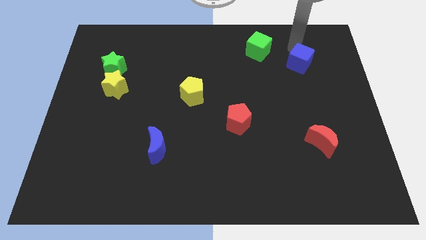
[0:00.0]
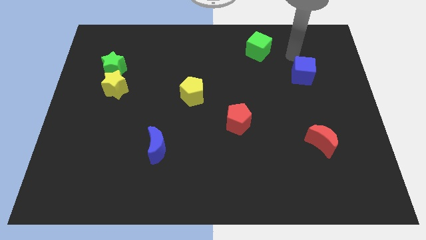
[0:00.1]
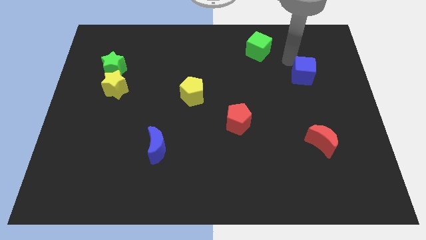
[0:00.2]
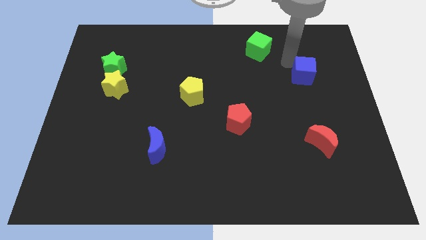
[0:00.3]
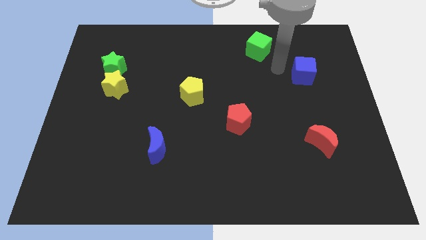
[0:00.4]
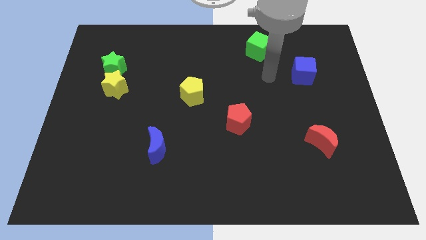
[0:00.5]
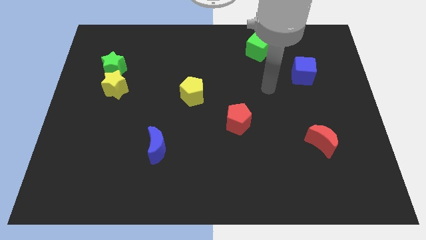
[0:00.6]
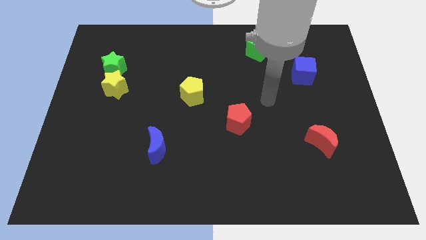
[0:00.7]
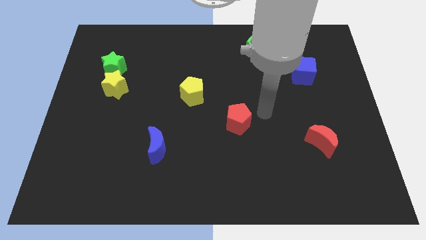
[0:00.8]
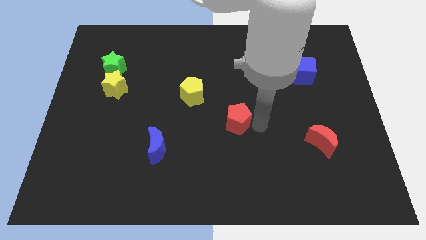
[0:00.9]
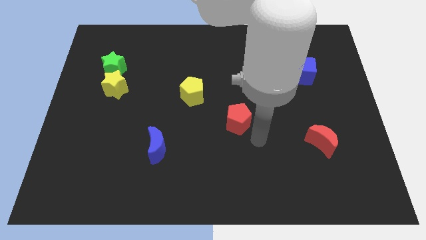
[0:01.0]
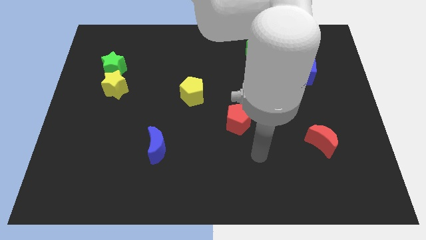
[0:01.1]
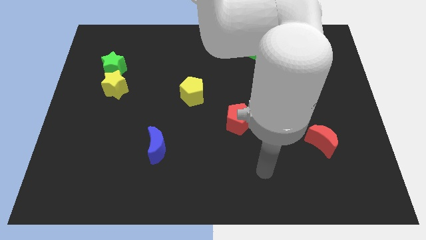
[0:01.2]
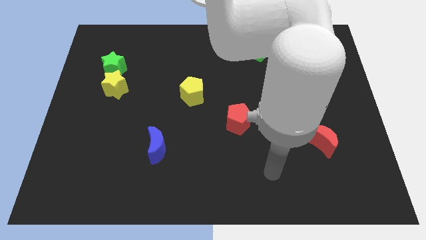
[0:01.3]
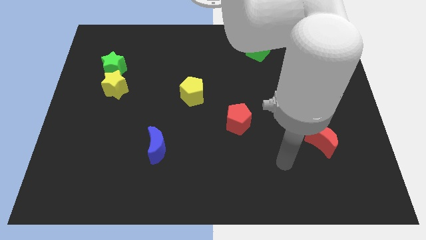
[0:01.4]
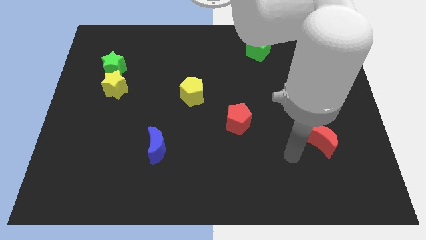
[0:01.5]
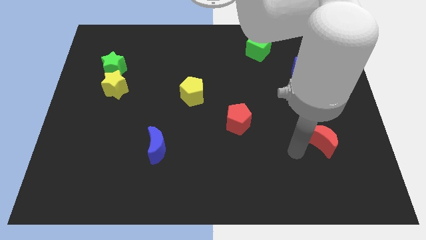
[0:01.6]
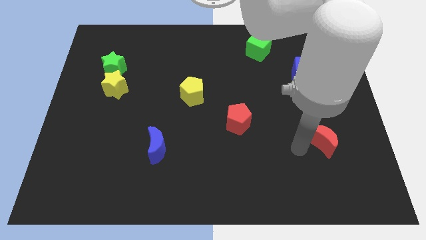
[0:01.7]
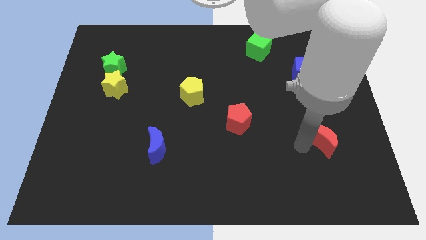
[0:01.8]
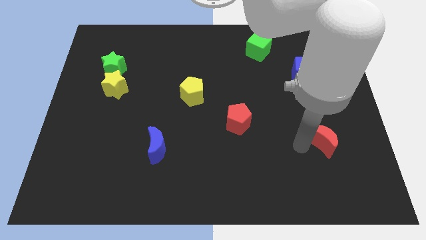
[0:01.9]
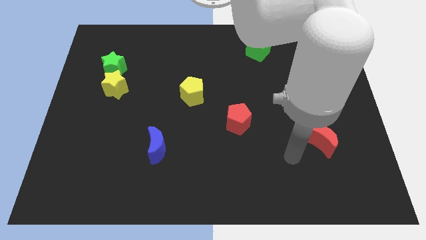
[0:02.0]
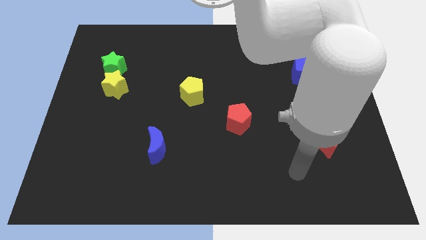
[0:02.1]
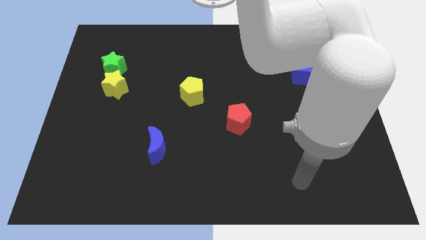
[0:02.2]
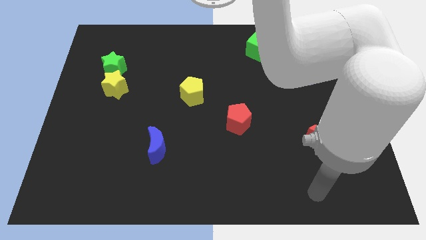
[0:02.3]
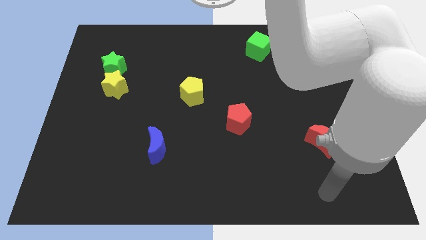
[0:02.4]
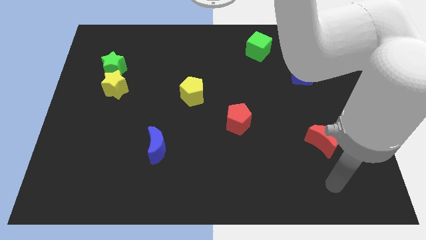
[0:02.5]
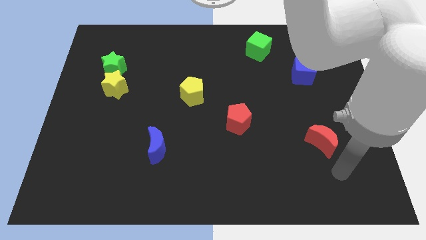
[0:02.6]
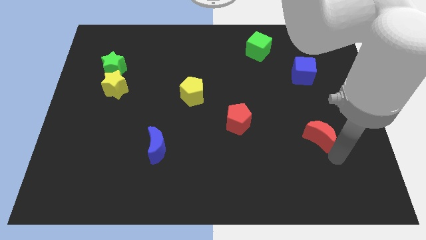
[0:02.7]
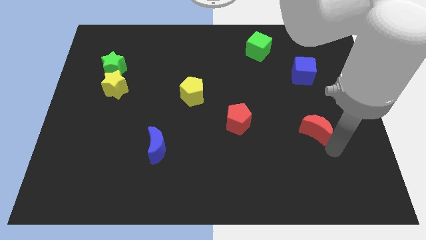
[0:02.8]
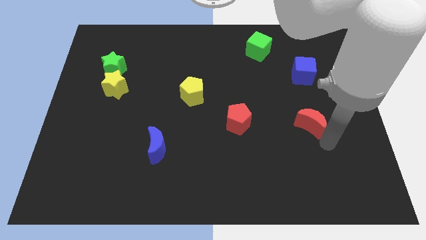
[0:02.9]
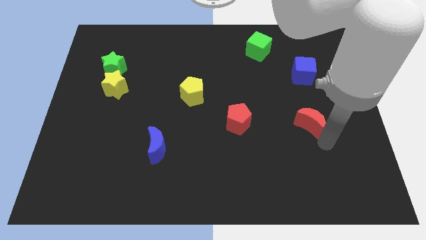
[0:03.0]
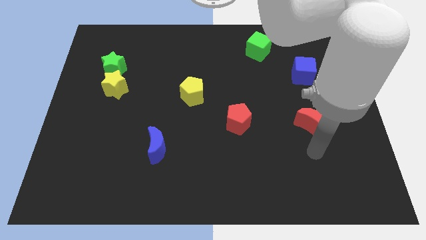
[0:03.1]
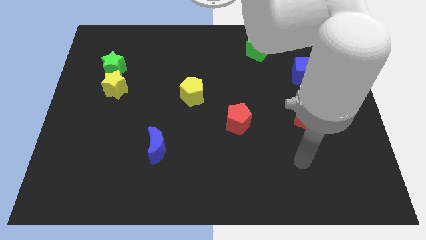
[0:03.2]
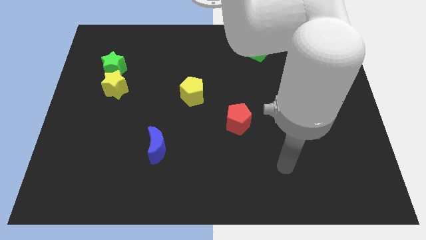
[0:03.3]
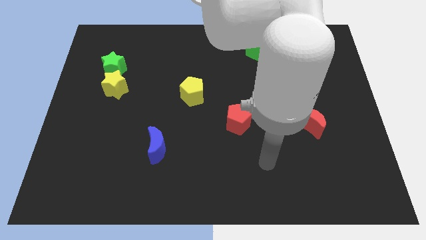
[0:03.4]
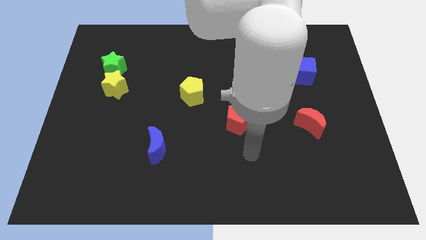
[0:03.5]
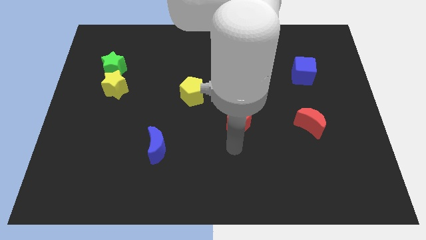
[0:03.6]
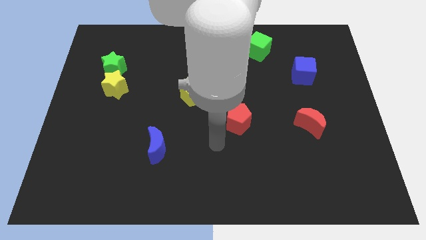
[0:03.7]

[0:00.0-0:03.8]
push the red crescent slightly upwards

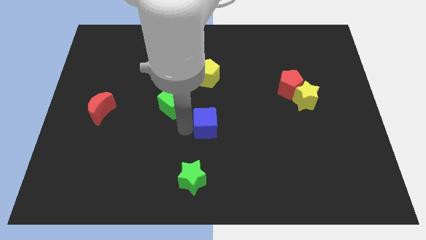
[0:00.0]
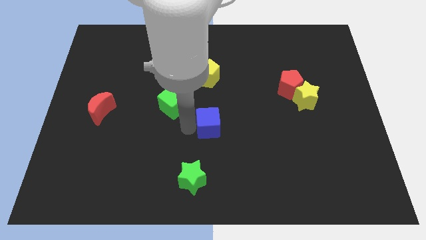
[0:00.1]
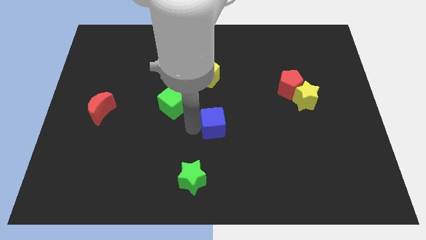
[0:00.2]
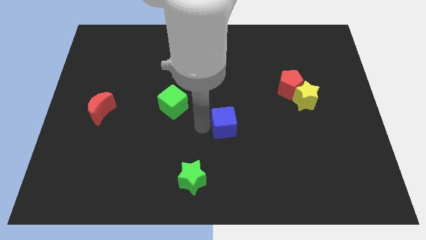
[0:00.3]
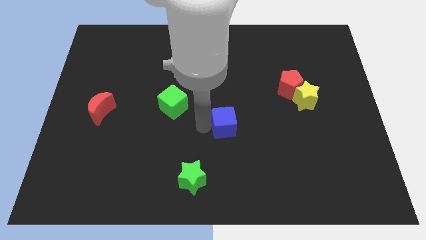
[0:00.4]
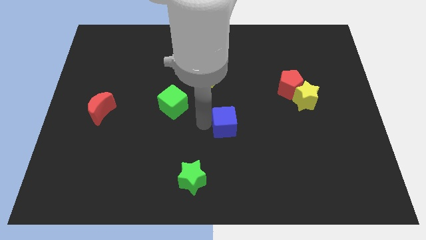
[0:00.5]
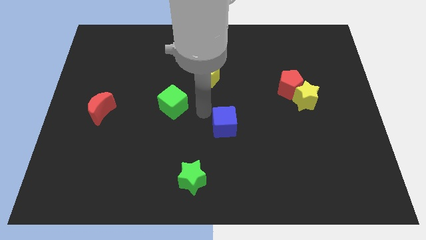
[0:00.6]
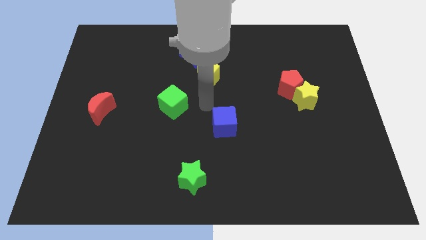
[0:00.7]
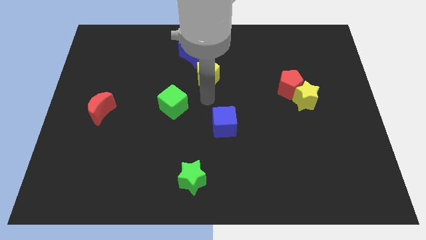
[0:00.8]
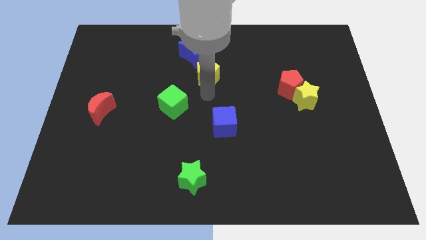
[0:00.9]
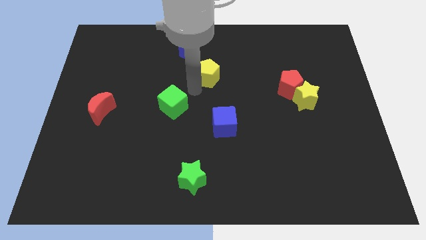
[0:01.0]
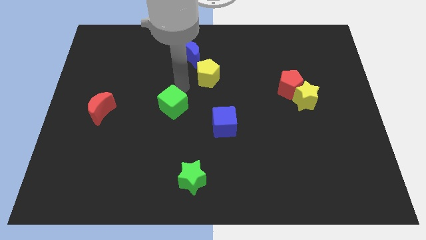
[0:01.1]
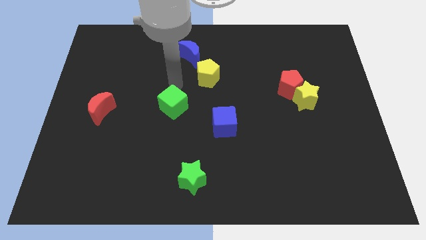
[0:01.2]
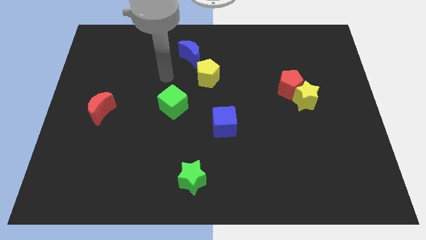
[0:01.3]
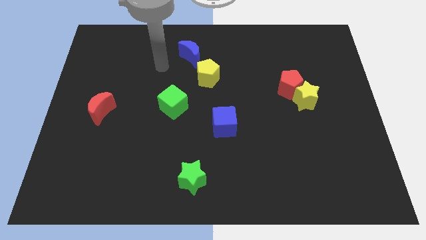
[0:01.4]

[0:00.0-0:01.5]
point your arm above the green cube

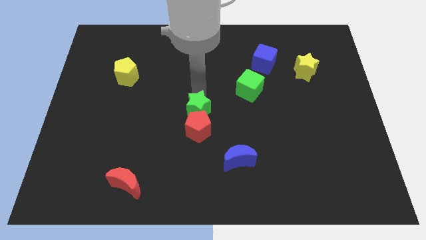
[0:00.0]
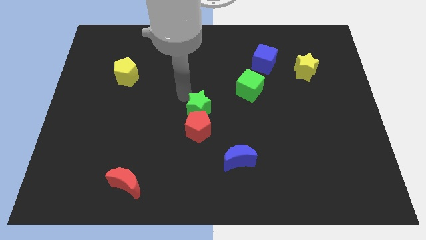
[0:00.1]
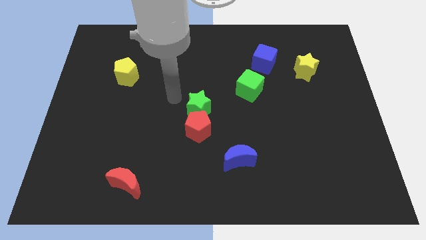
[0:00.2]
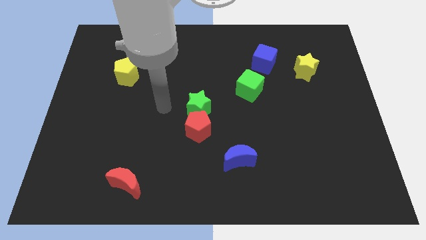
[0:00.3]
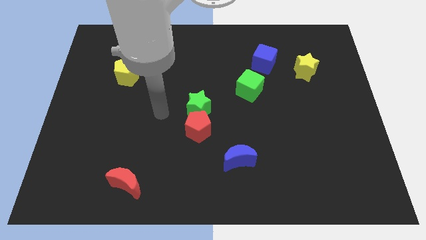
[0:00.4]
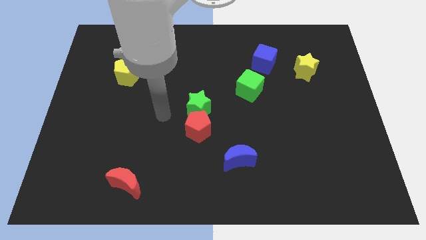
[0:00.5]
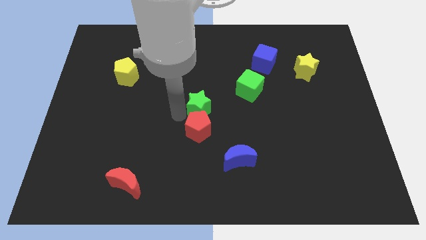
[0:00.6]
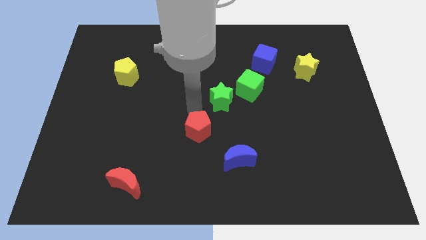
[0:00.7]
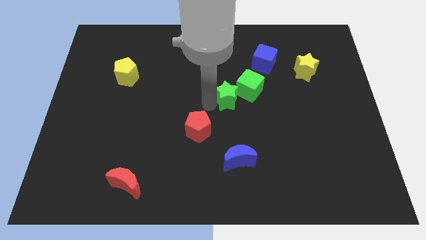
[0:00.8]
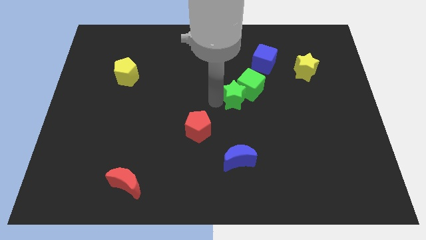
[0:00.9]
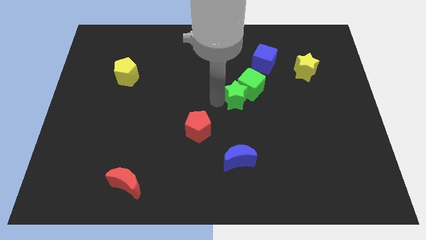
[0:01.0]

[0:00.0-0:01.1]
push the green star into the green cube

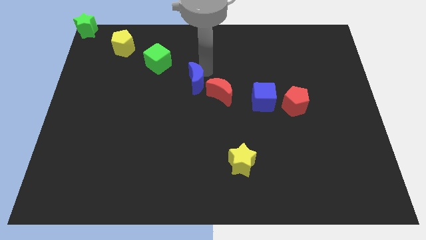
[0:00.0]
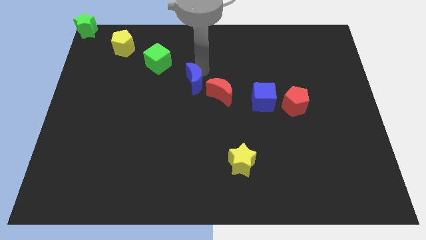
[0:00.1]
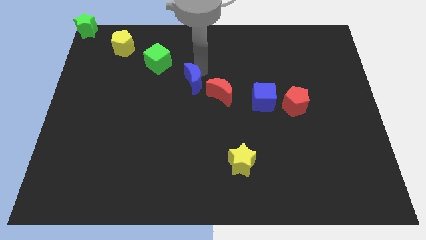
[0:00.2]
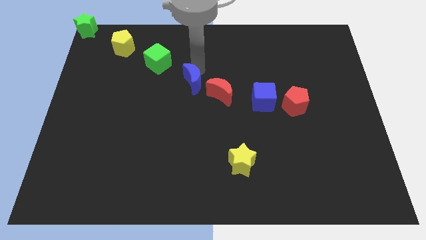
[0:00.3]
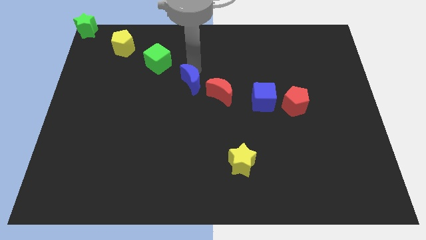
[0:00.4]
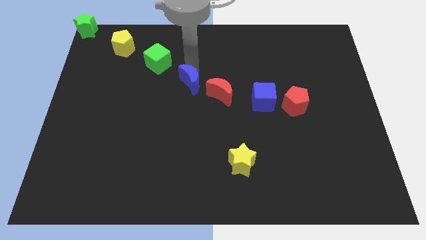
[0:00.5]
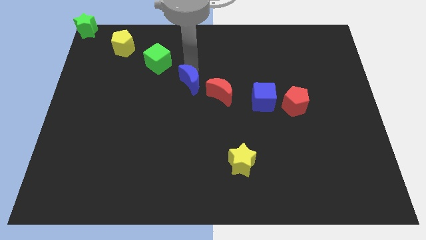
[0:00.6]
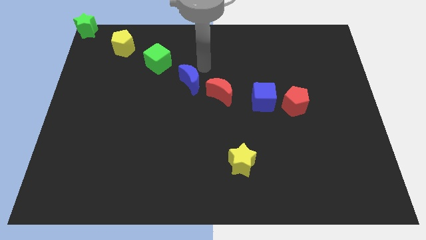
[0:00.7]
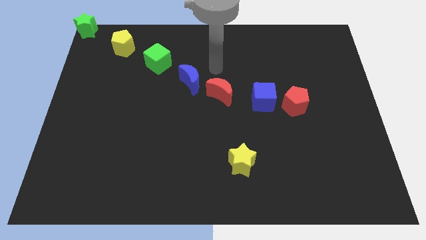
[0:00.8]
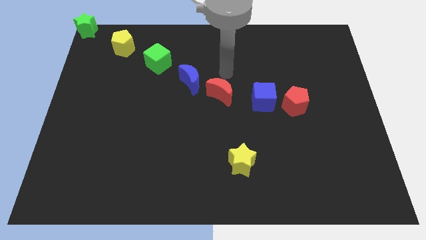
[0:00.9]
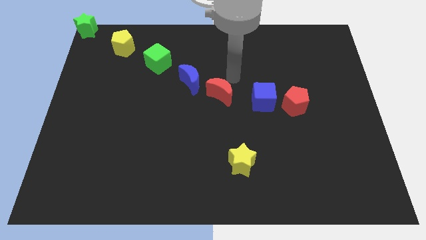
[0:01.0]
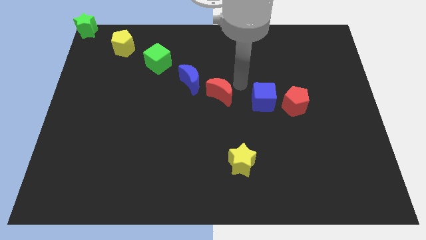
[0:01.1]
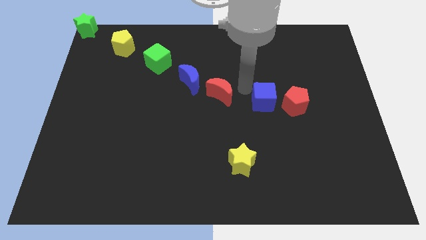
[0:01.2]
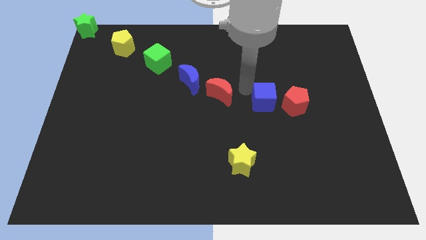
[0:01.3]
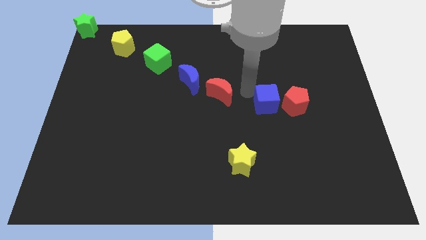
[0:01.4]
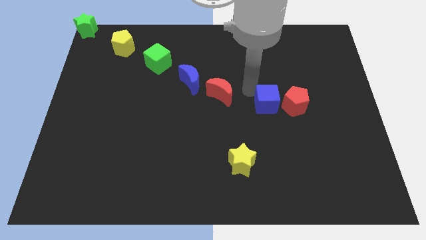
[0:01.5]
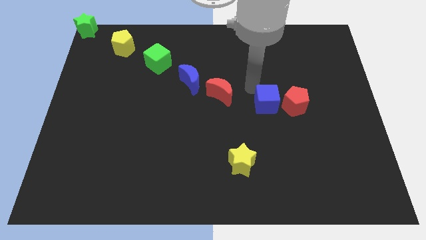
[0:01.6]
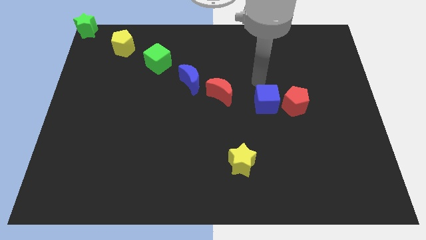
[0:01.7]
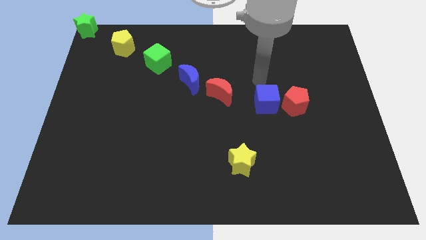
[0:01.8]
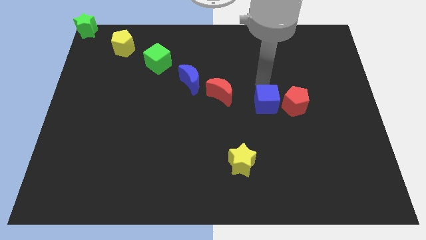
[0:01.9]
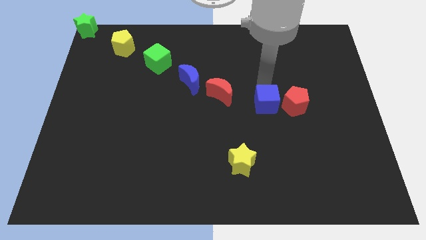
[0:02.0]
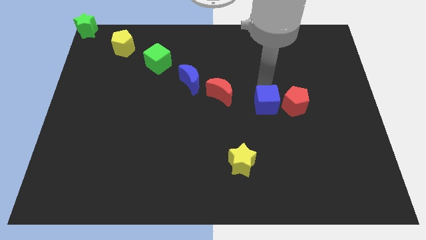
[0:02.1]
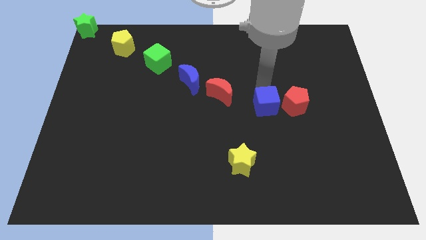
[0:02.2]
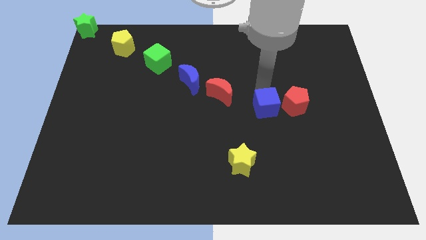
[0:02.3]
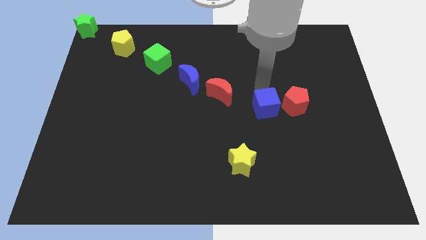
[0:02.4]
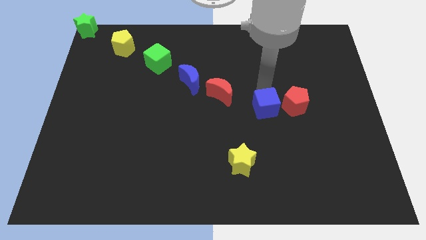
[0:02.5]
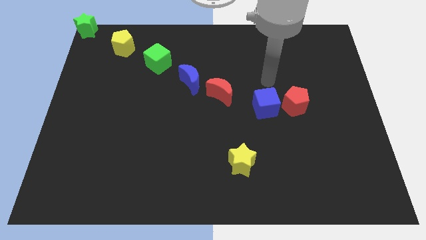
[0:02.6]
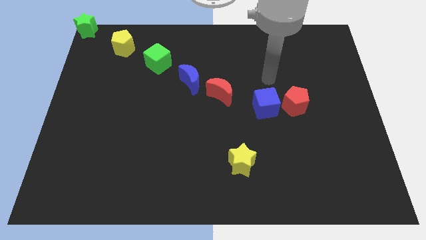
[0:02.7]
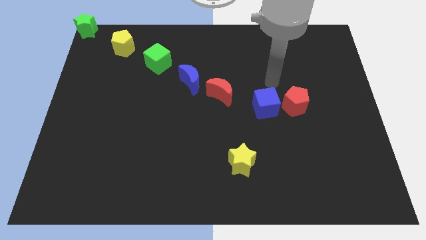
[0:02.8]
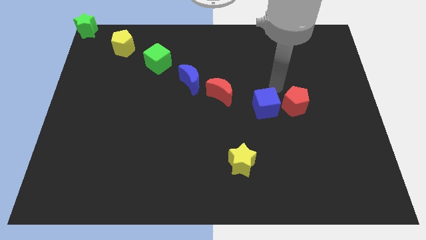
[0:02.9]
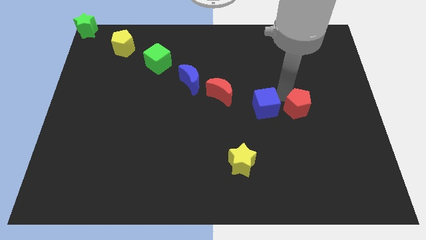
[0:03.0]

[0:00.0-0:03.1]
slightly move the blue cube towards down
